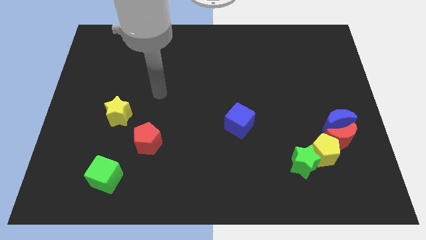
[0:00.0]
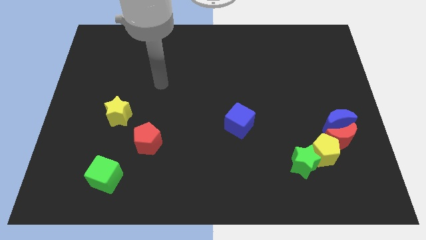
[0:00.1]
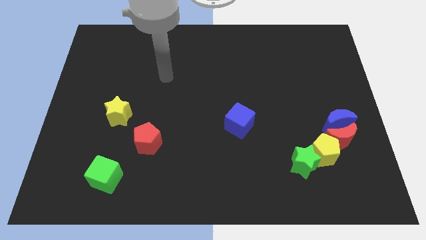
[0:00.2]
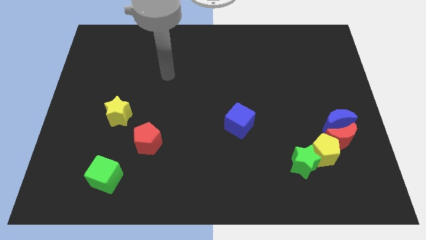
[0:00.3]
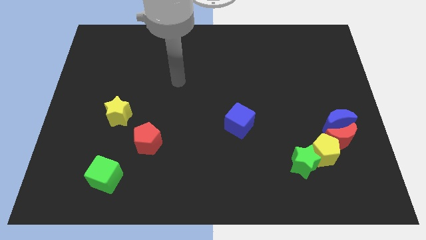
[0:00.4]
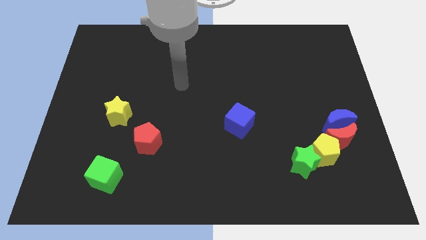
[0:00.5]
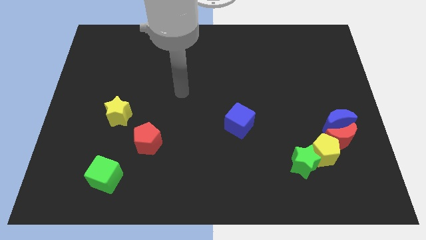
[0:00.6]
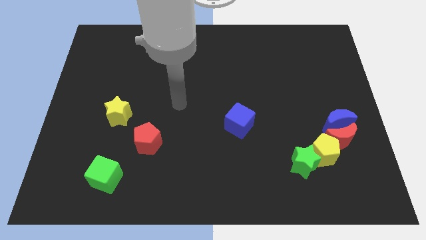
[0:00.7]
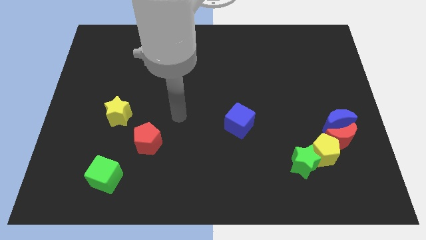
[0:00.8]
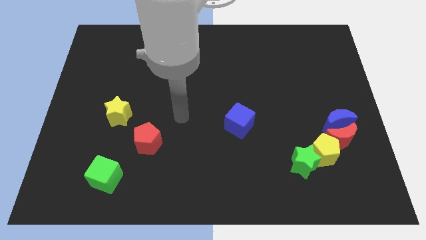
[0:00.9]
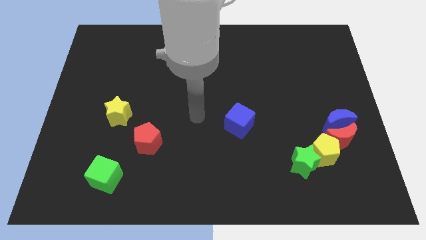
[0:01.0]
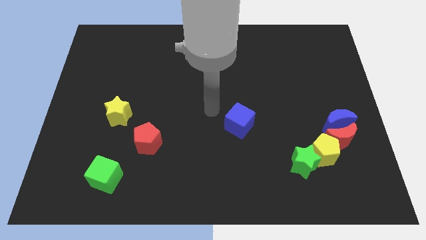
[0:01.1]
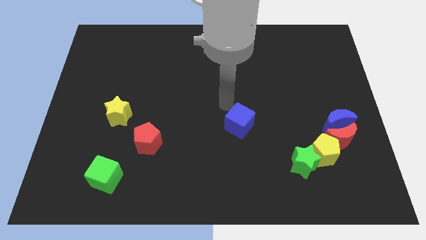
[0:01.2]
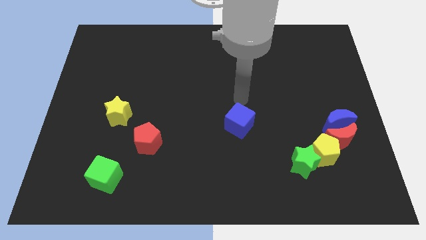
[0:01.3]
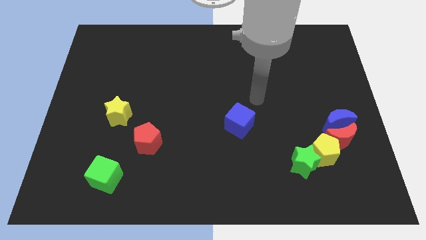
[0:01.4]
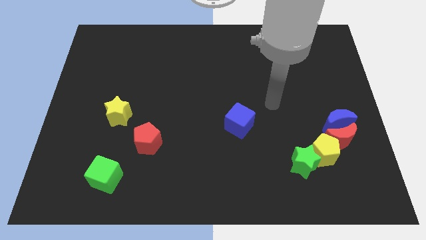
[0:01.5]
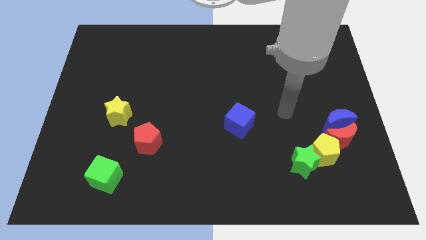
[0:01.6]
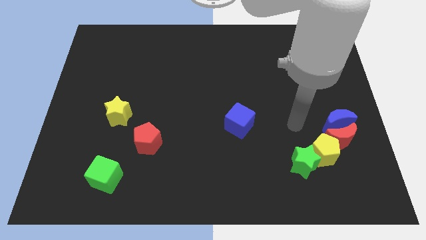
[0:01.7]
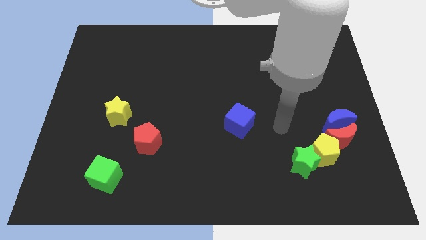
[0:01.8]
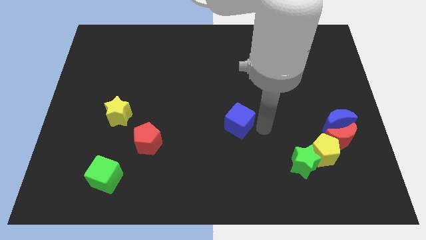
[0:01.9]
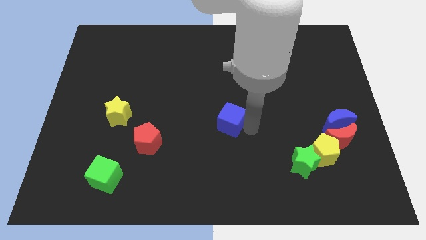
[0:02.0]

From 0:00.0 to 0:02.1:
move your arm towards the blue cube

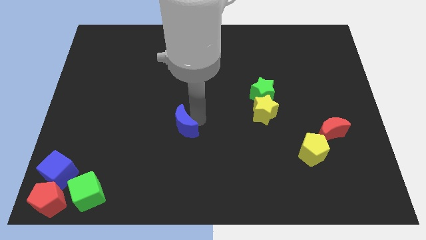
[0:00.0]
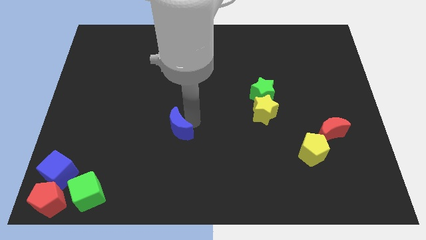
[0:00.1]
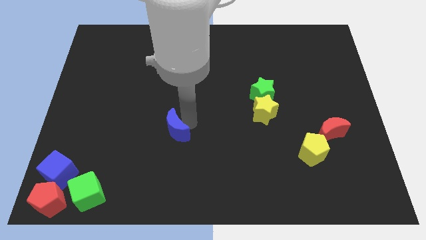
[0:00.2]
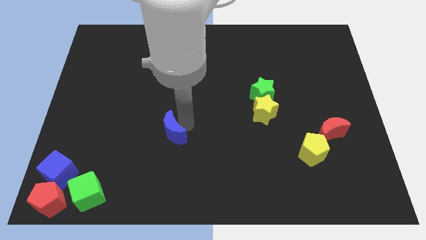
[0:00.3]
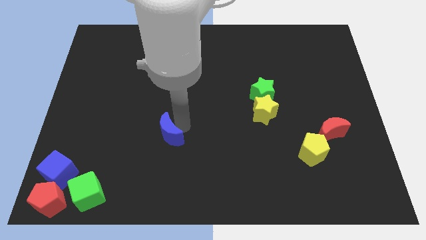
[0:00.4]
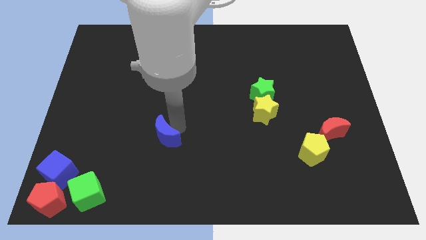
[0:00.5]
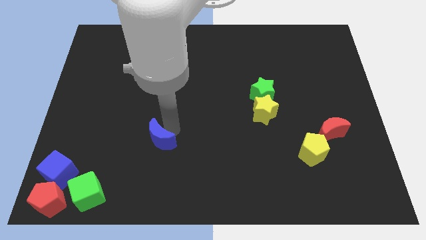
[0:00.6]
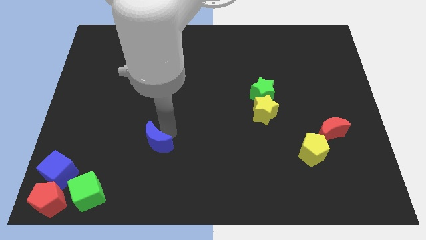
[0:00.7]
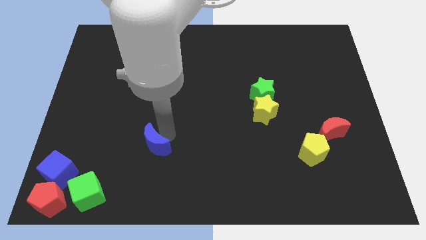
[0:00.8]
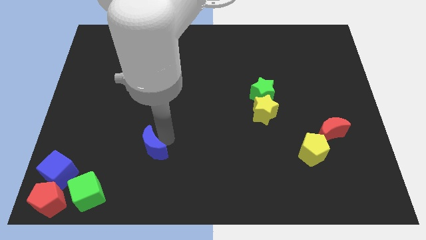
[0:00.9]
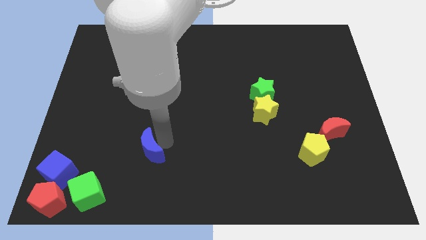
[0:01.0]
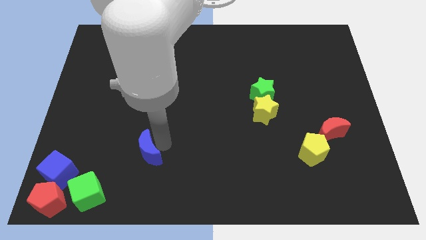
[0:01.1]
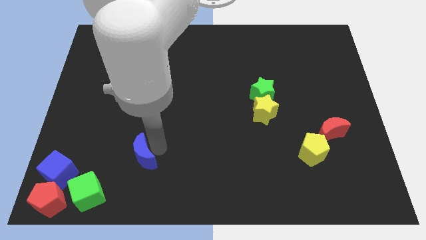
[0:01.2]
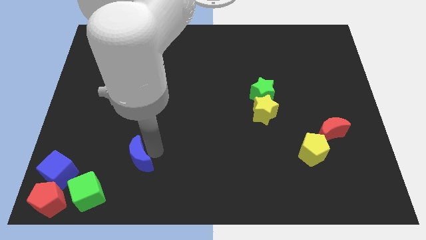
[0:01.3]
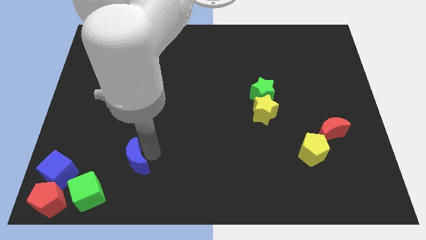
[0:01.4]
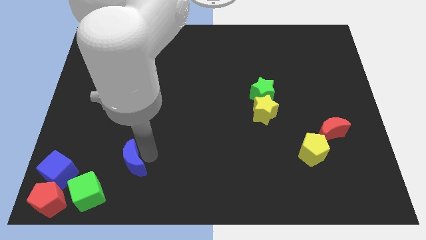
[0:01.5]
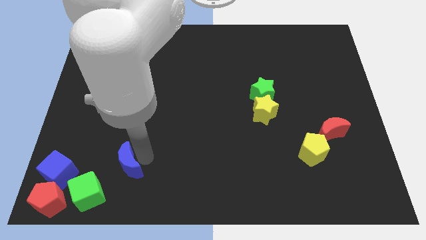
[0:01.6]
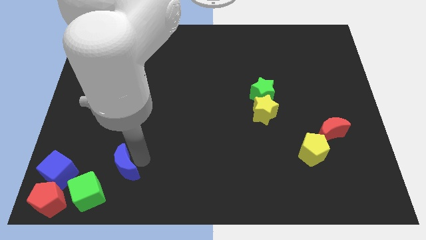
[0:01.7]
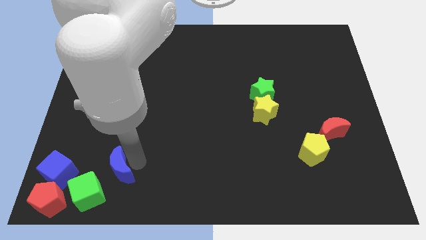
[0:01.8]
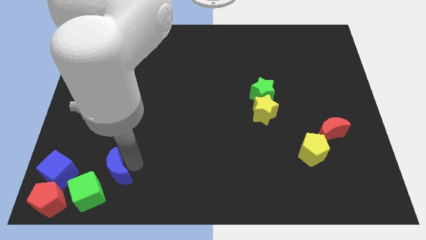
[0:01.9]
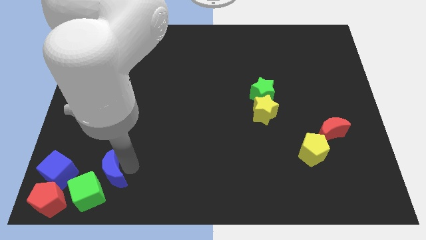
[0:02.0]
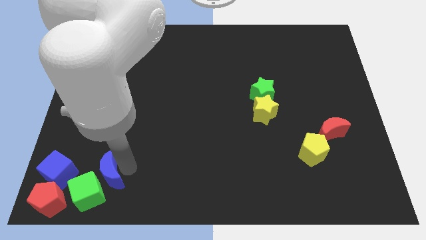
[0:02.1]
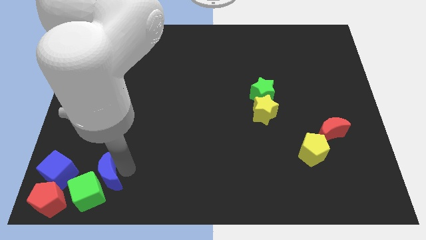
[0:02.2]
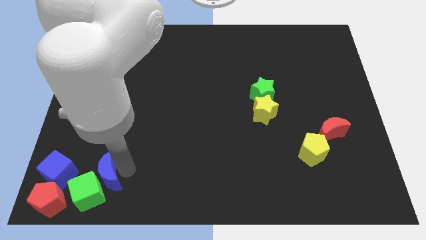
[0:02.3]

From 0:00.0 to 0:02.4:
move the center blue crescent towards the bottom left

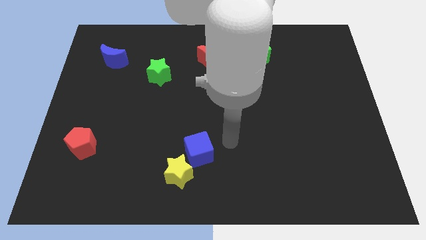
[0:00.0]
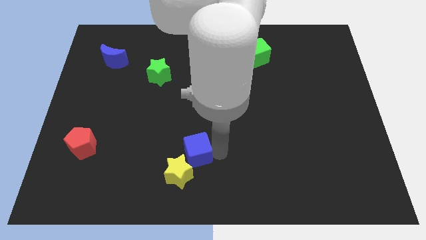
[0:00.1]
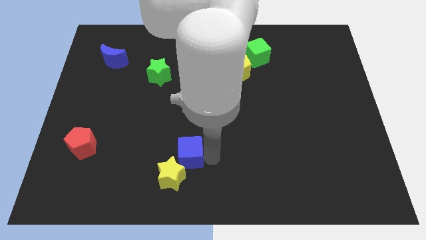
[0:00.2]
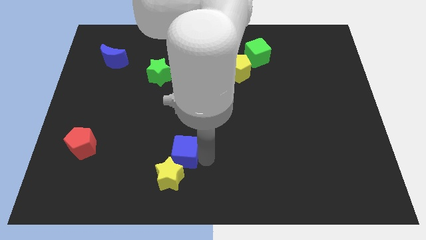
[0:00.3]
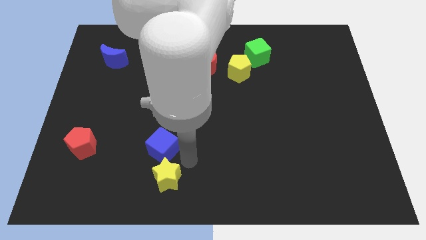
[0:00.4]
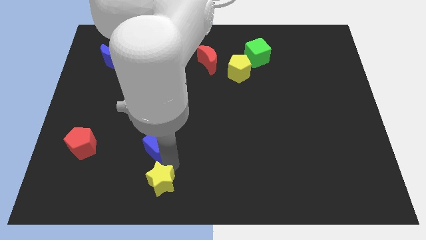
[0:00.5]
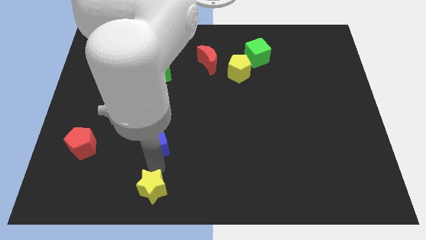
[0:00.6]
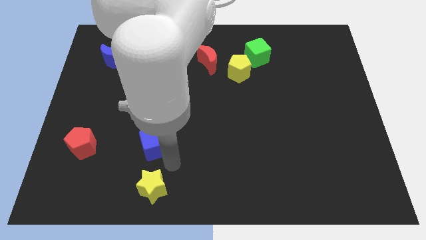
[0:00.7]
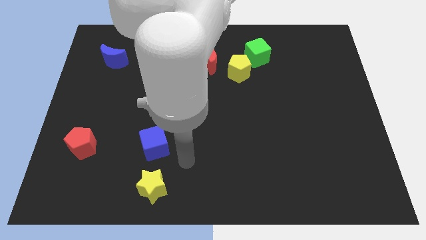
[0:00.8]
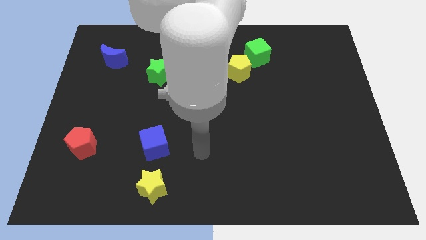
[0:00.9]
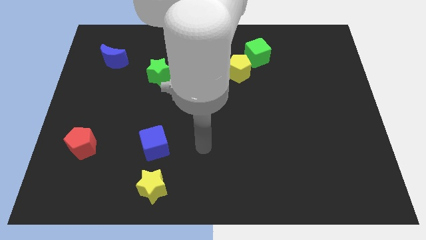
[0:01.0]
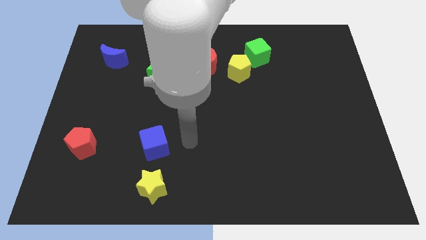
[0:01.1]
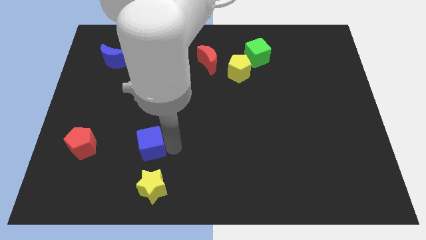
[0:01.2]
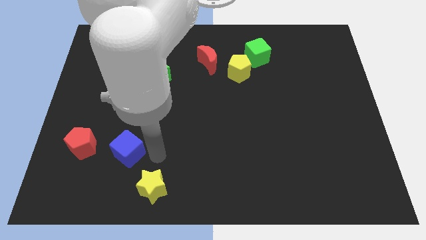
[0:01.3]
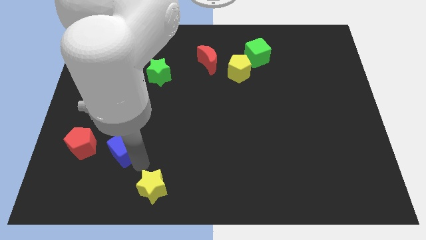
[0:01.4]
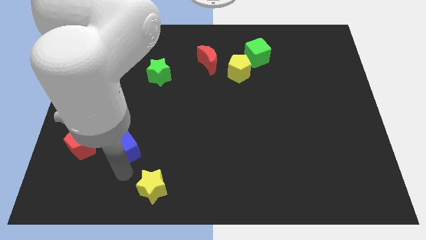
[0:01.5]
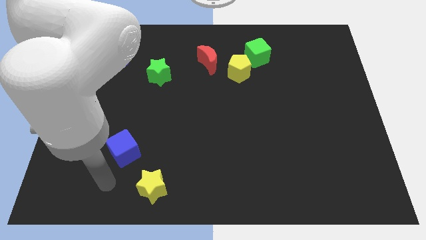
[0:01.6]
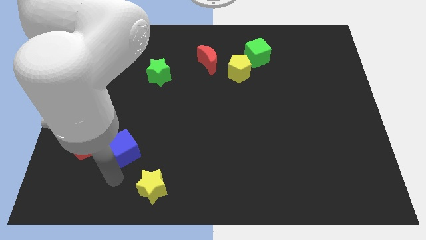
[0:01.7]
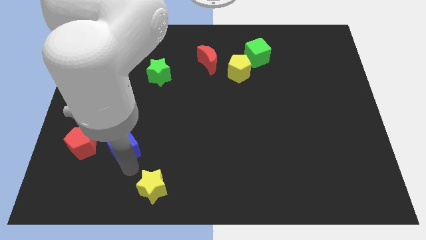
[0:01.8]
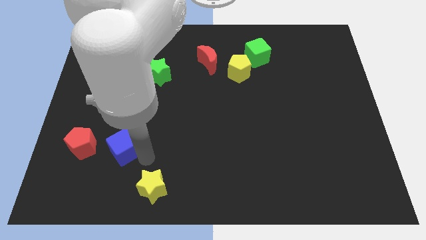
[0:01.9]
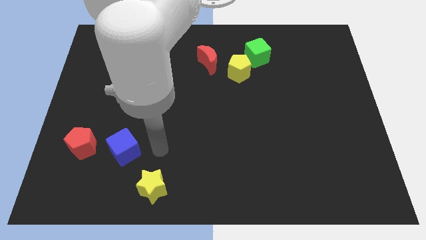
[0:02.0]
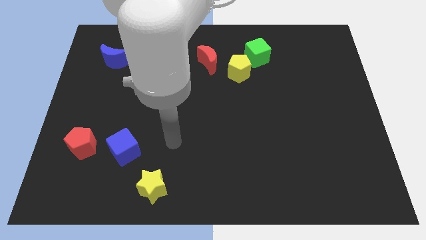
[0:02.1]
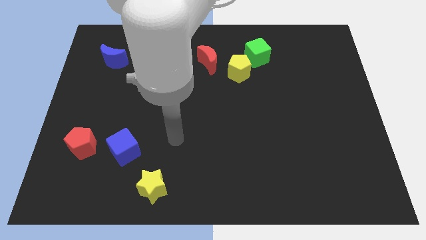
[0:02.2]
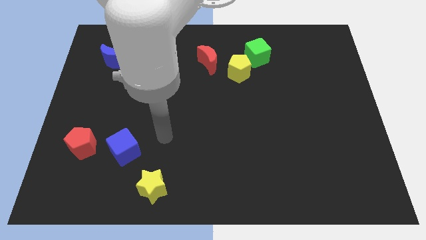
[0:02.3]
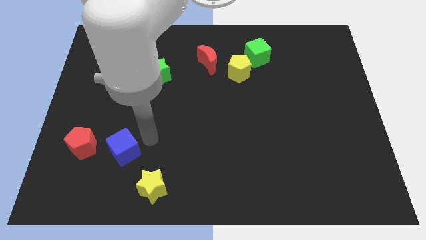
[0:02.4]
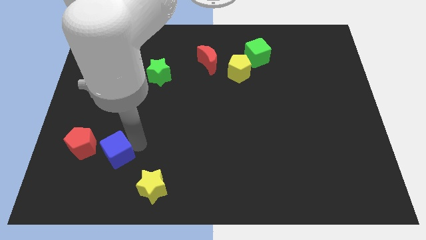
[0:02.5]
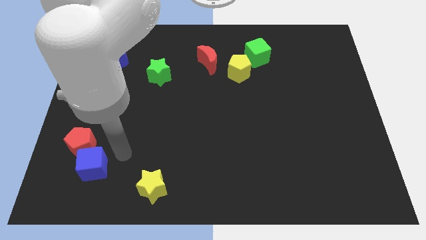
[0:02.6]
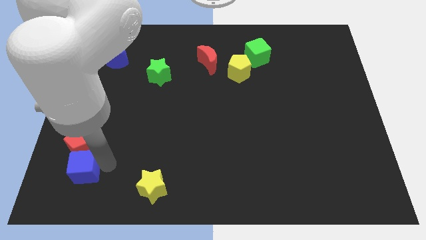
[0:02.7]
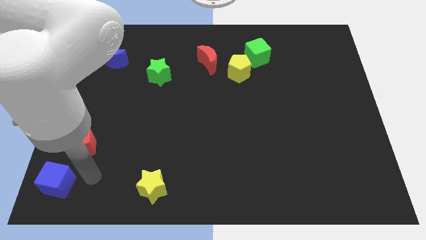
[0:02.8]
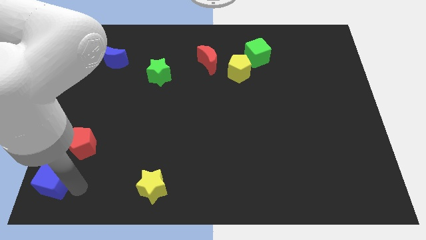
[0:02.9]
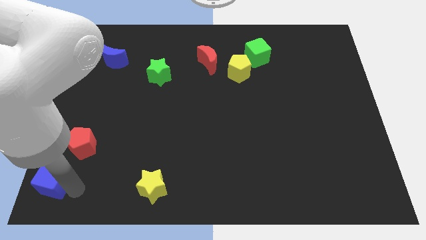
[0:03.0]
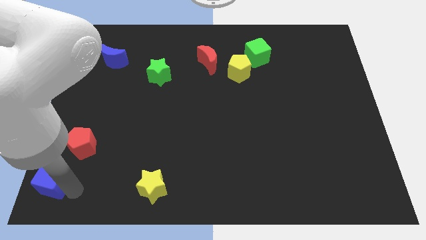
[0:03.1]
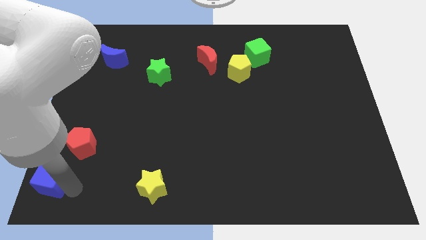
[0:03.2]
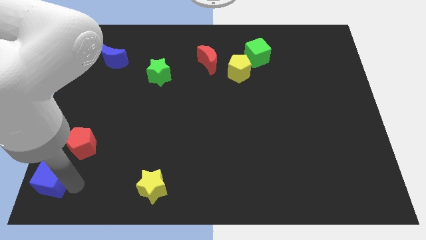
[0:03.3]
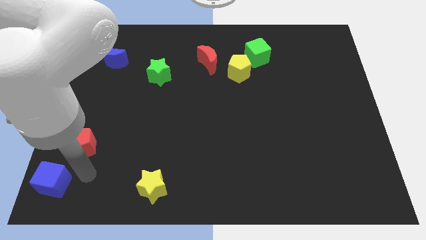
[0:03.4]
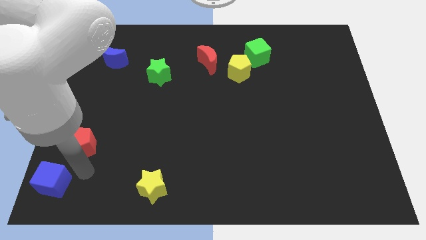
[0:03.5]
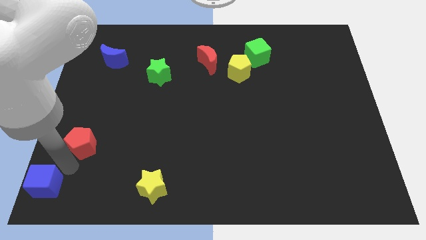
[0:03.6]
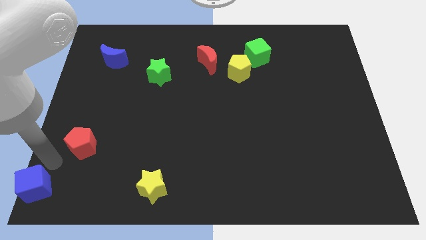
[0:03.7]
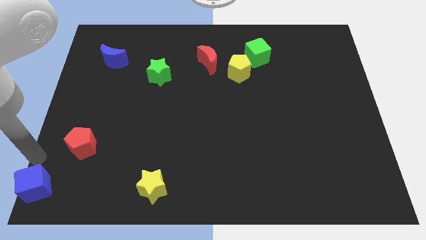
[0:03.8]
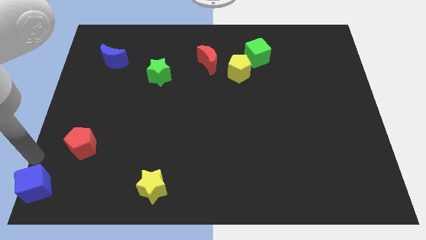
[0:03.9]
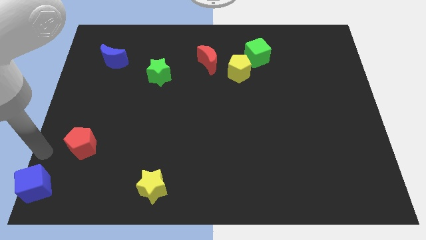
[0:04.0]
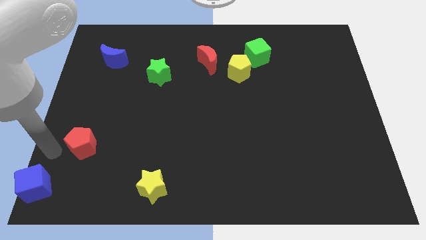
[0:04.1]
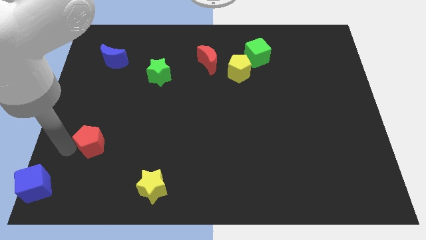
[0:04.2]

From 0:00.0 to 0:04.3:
move the blue cube to the bottom left corner of the board

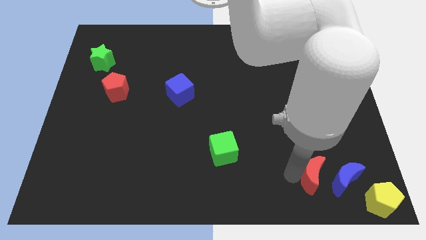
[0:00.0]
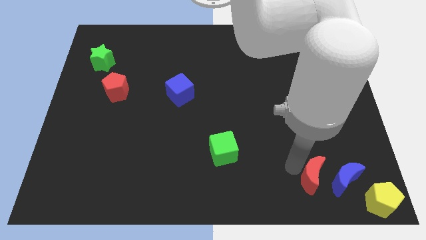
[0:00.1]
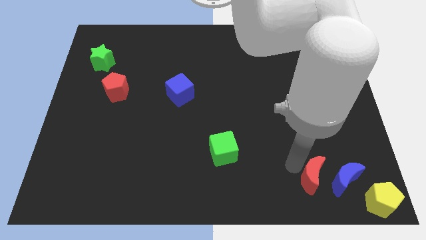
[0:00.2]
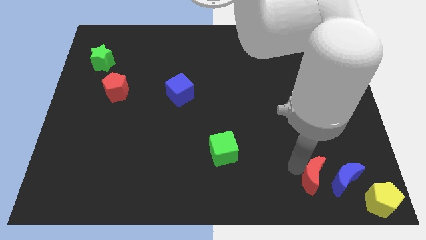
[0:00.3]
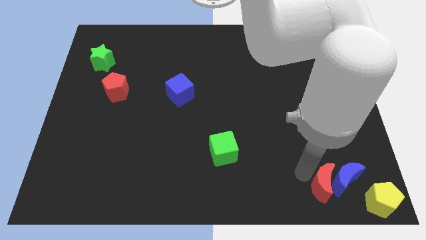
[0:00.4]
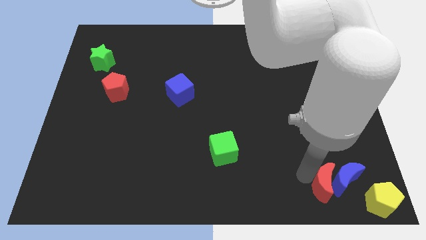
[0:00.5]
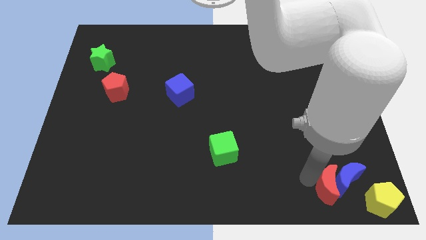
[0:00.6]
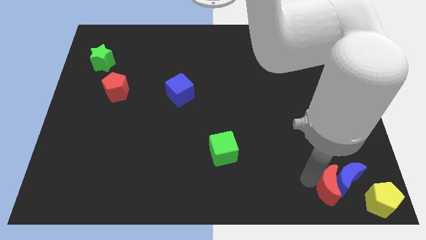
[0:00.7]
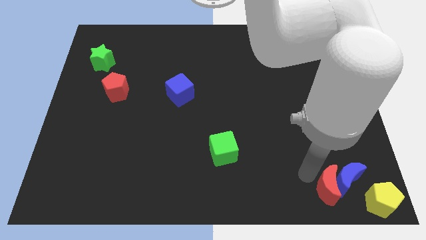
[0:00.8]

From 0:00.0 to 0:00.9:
push the red crescent into the blue crescent
